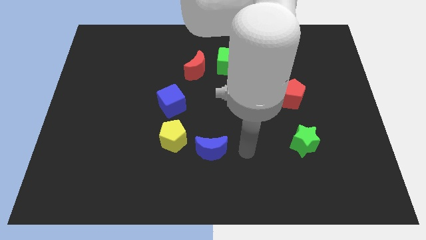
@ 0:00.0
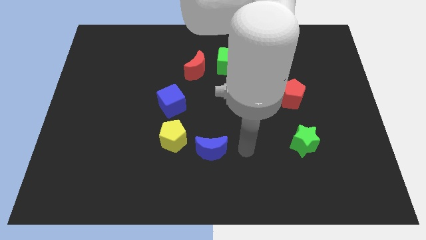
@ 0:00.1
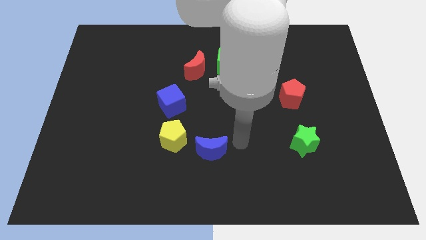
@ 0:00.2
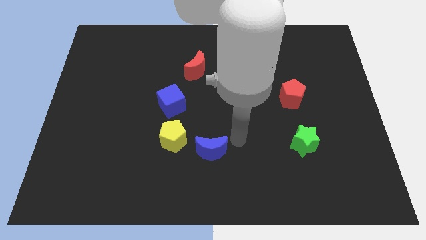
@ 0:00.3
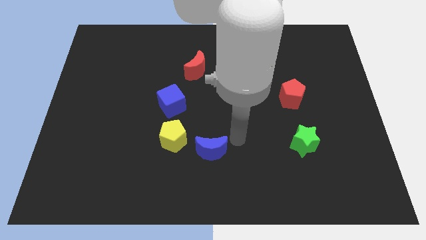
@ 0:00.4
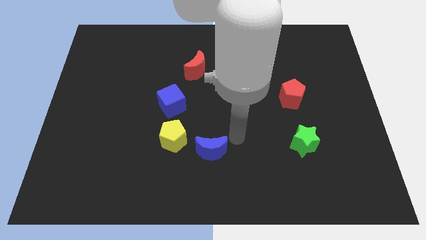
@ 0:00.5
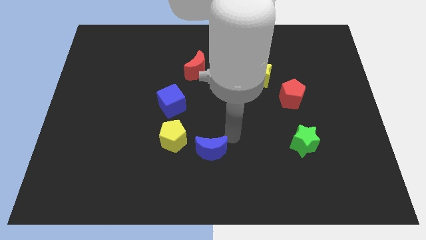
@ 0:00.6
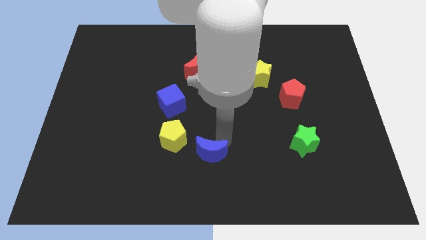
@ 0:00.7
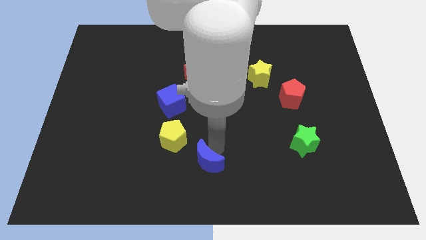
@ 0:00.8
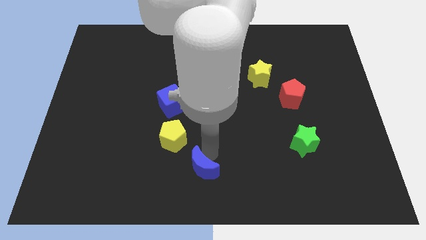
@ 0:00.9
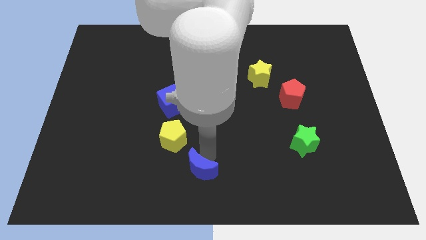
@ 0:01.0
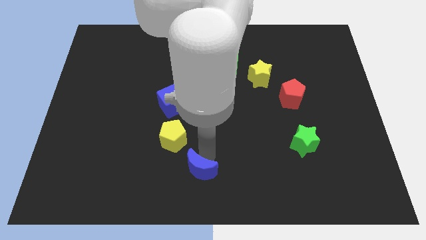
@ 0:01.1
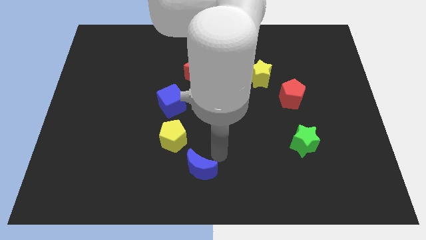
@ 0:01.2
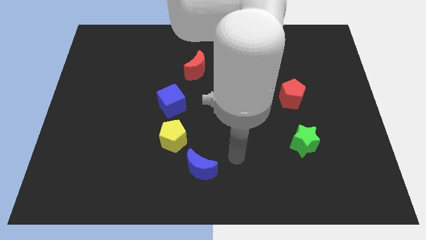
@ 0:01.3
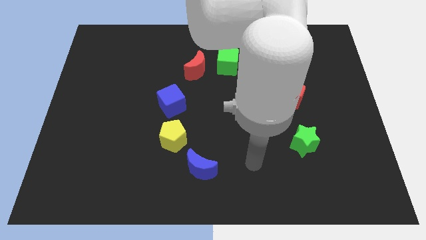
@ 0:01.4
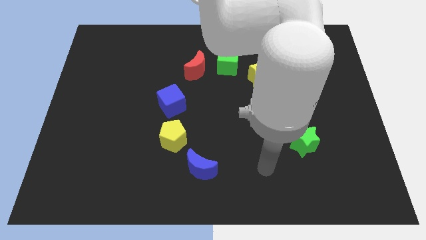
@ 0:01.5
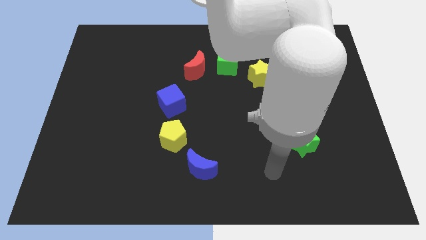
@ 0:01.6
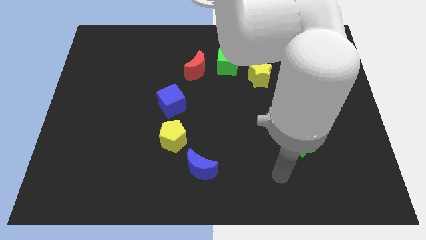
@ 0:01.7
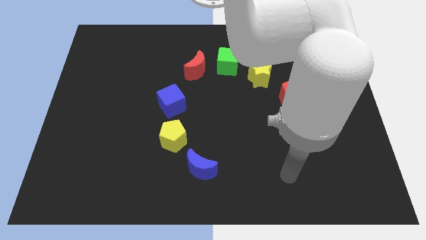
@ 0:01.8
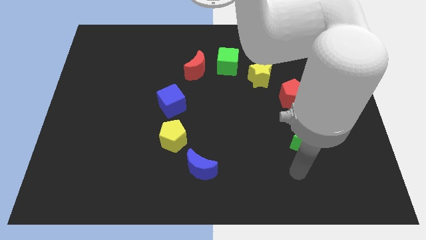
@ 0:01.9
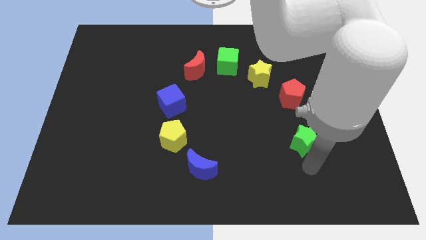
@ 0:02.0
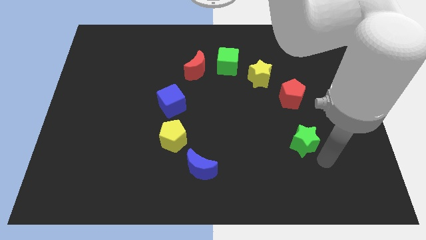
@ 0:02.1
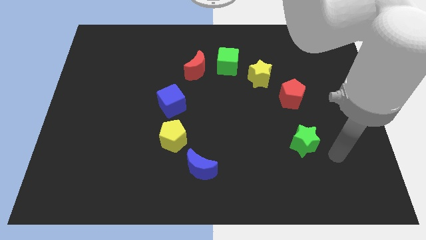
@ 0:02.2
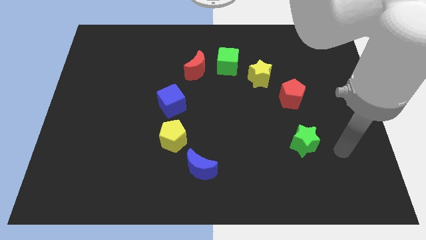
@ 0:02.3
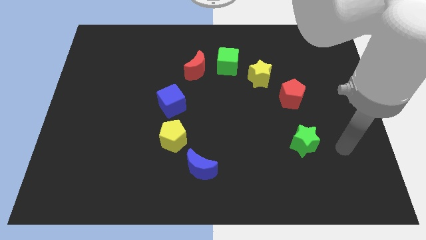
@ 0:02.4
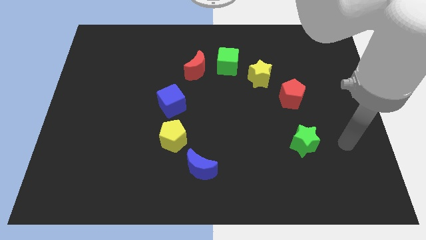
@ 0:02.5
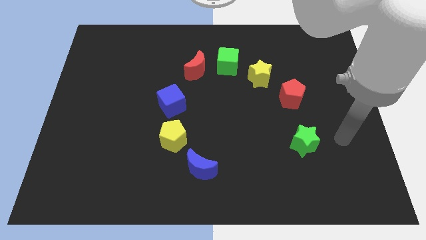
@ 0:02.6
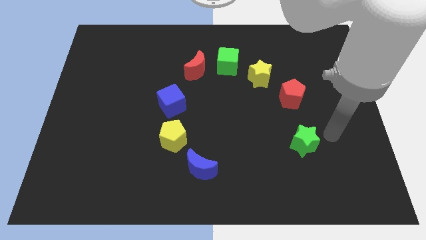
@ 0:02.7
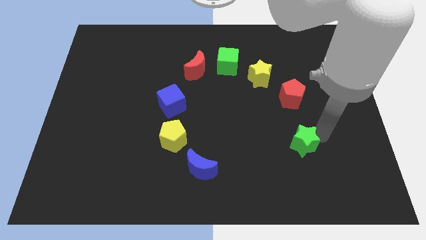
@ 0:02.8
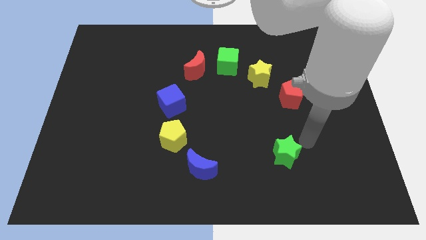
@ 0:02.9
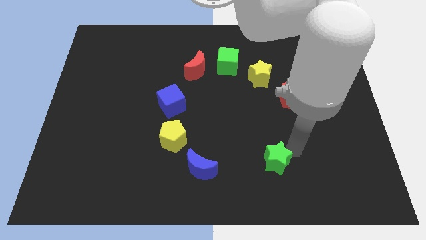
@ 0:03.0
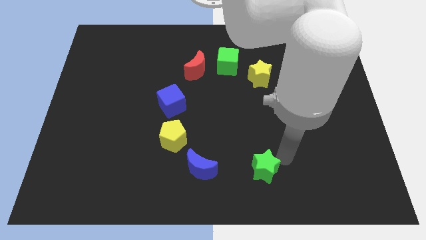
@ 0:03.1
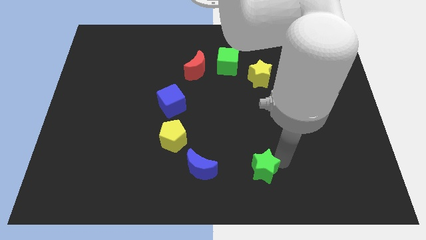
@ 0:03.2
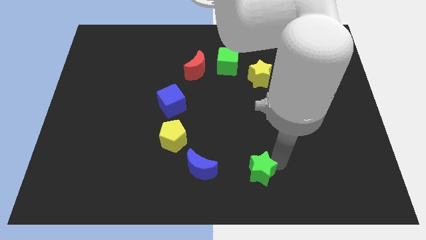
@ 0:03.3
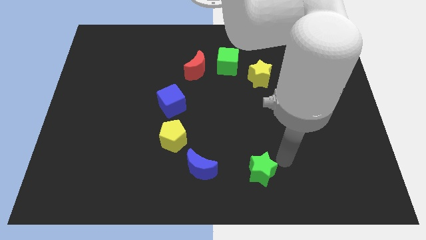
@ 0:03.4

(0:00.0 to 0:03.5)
drag green star below yellow star

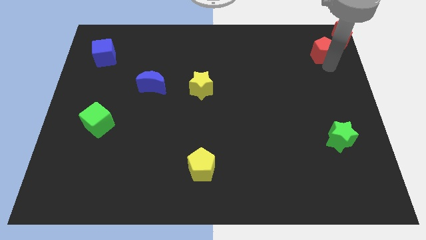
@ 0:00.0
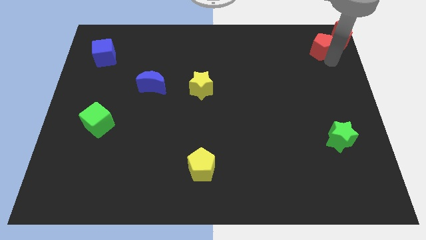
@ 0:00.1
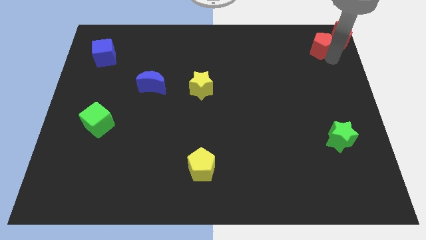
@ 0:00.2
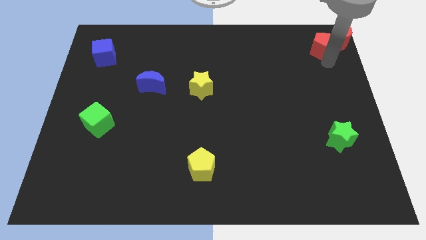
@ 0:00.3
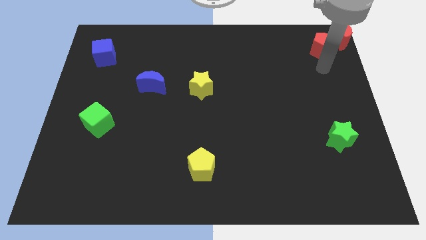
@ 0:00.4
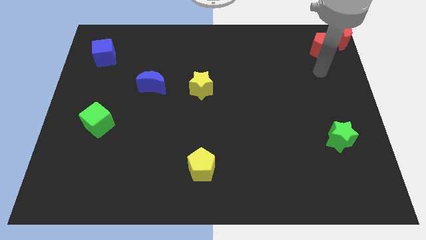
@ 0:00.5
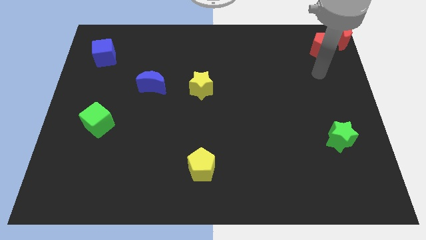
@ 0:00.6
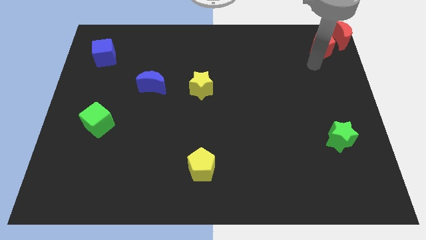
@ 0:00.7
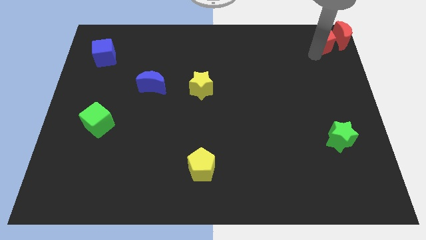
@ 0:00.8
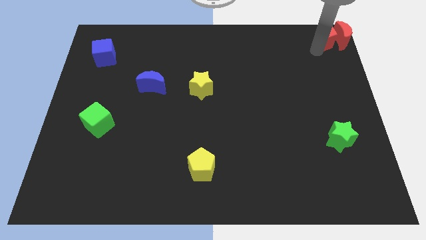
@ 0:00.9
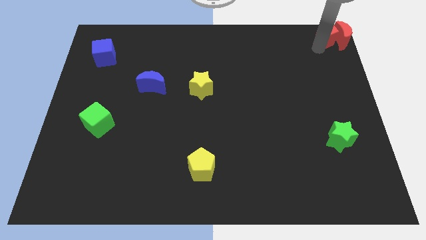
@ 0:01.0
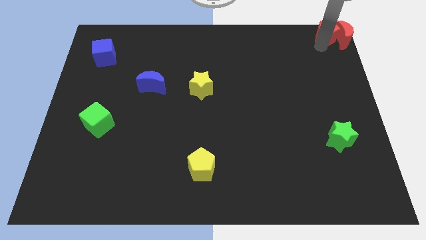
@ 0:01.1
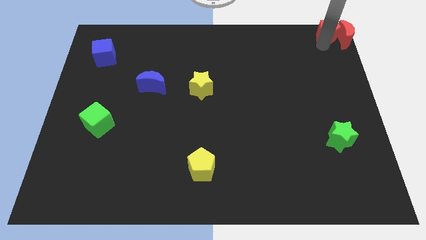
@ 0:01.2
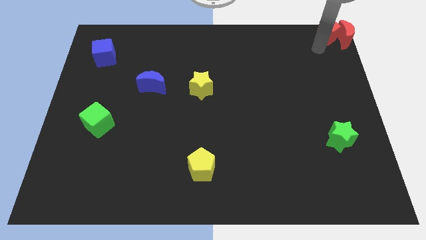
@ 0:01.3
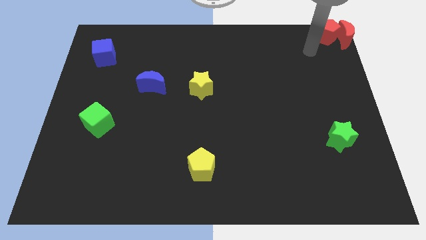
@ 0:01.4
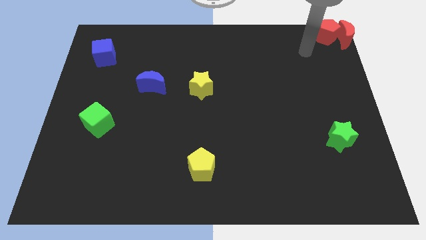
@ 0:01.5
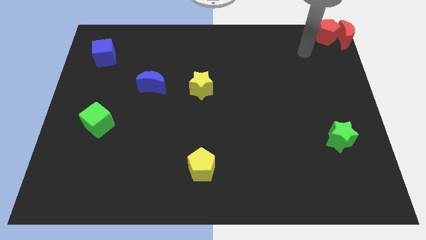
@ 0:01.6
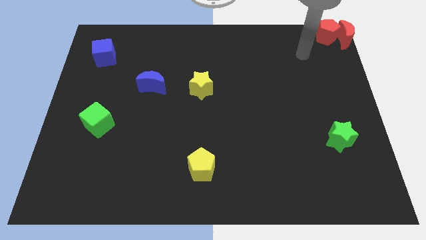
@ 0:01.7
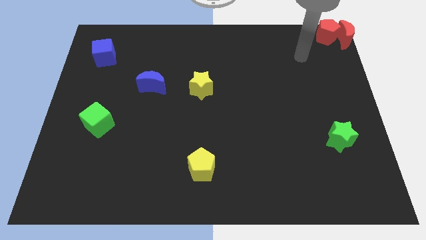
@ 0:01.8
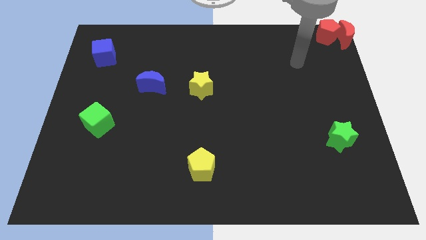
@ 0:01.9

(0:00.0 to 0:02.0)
move red pentagon close to red moon

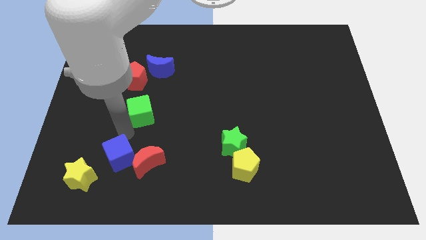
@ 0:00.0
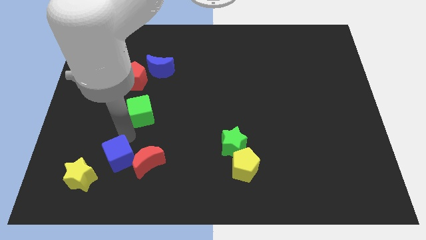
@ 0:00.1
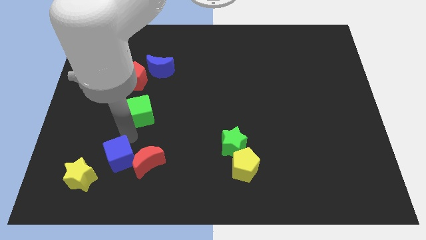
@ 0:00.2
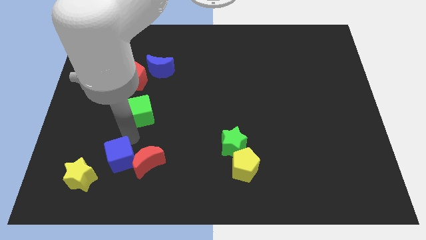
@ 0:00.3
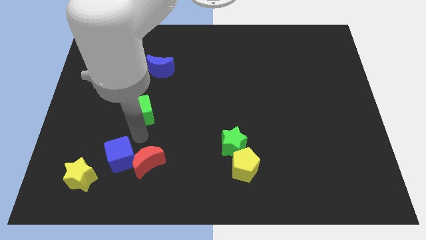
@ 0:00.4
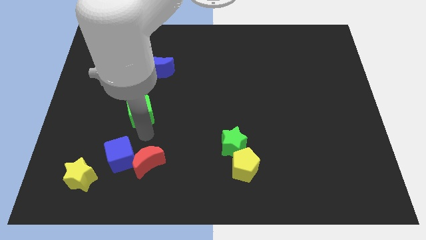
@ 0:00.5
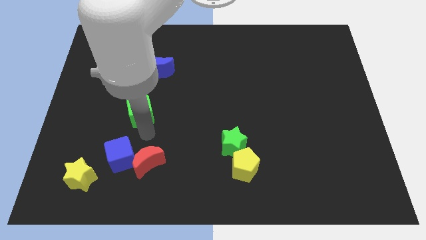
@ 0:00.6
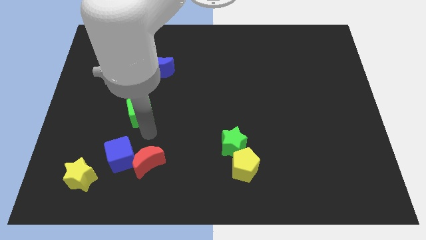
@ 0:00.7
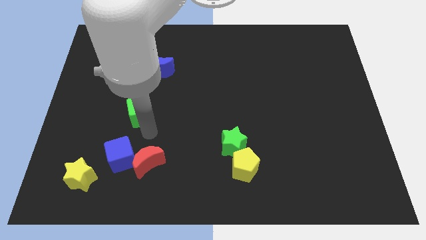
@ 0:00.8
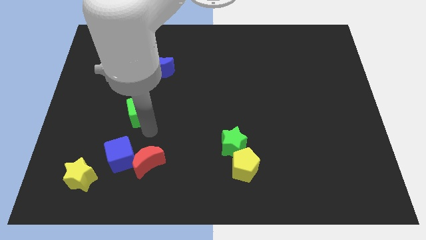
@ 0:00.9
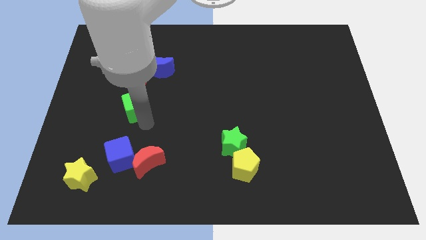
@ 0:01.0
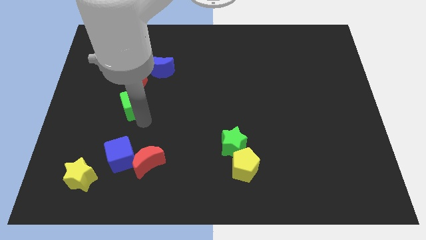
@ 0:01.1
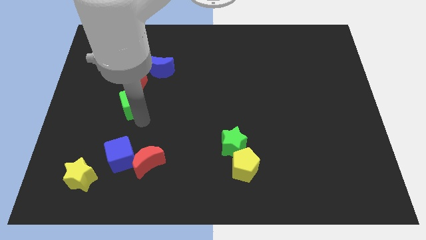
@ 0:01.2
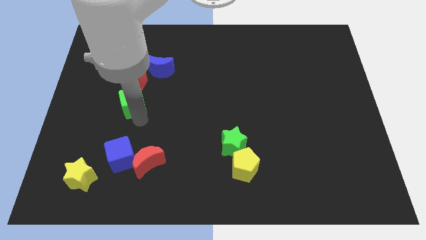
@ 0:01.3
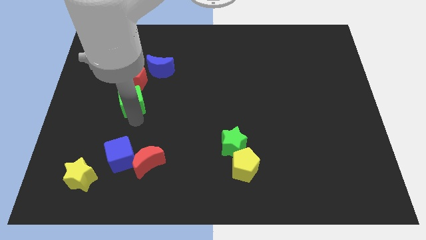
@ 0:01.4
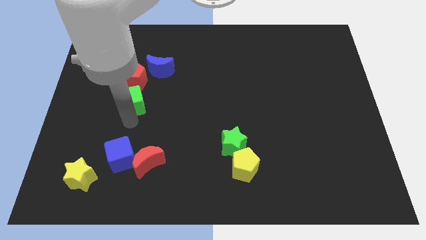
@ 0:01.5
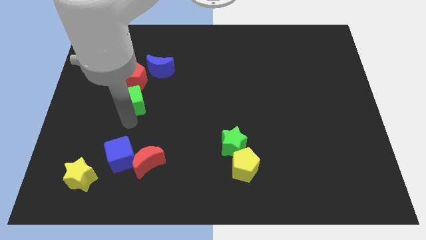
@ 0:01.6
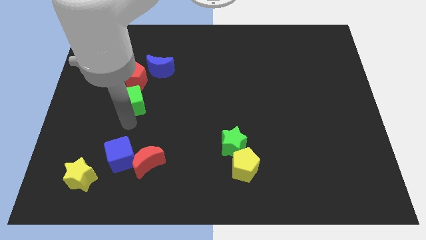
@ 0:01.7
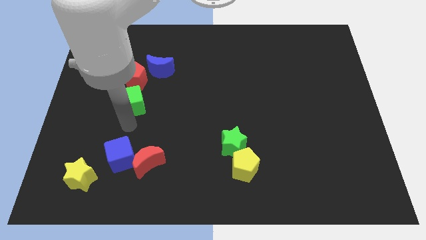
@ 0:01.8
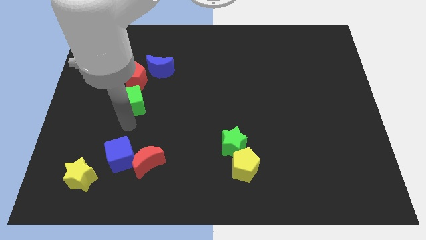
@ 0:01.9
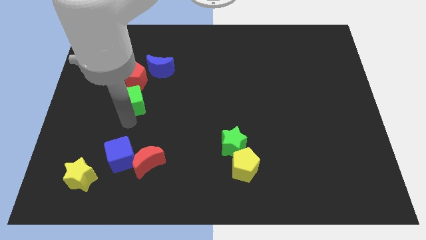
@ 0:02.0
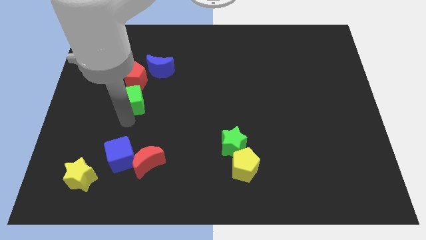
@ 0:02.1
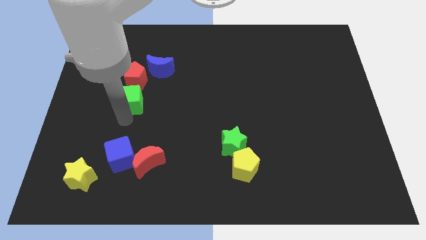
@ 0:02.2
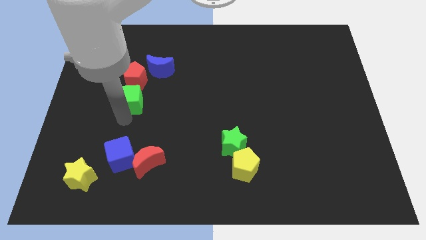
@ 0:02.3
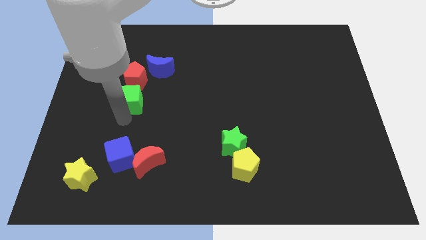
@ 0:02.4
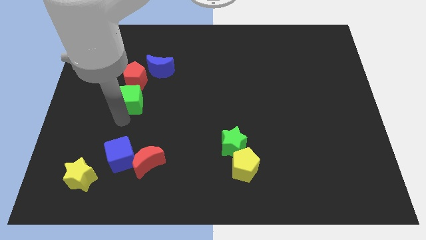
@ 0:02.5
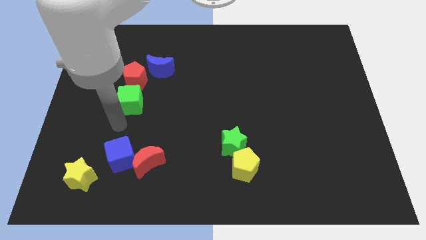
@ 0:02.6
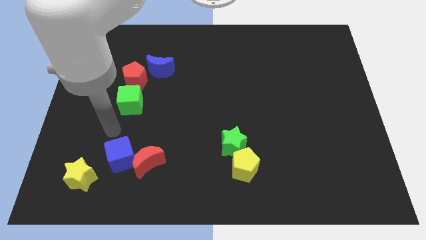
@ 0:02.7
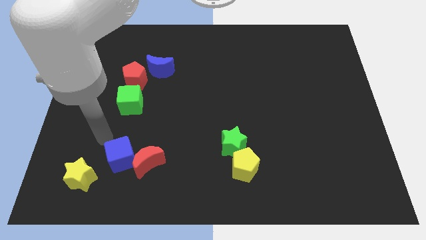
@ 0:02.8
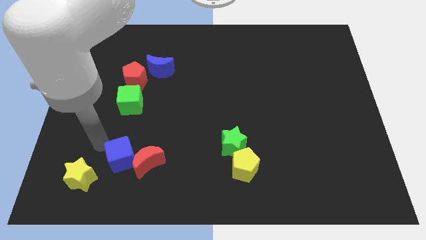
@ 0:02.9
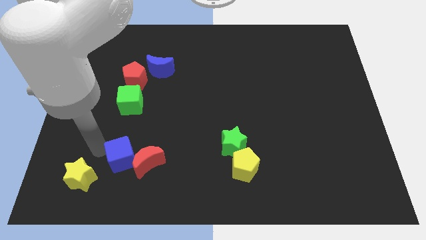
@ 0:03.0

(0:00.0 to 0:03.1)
place the green cube below the red pentagon

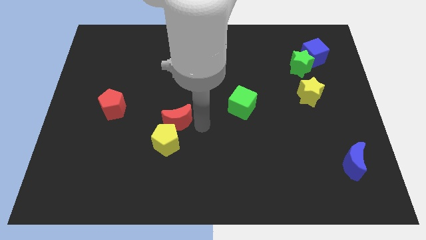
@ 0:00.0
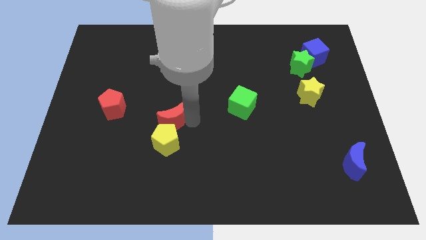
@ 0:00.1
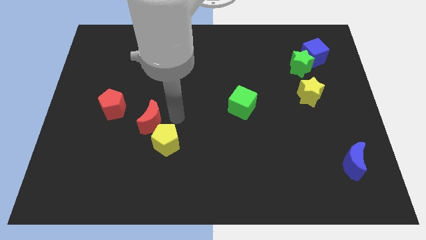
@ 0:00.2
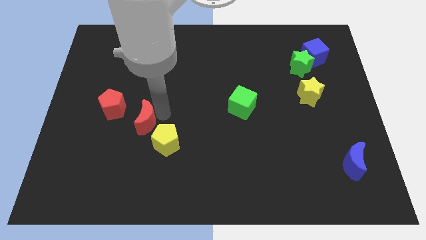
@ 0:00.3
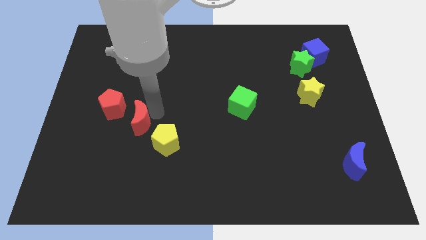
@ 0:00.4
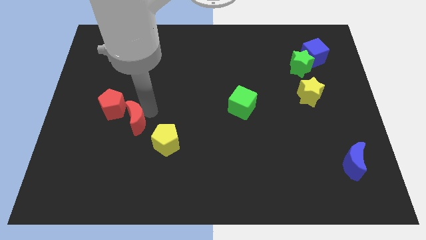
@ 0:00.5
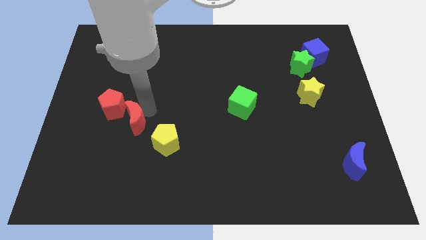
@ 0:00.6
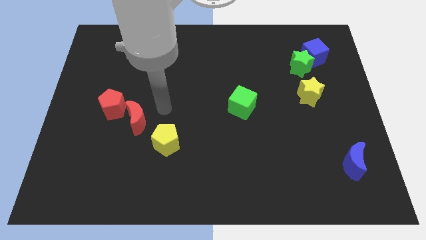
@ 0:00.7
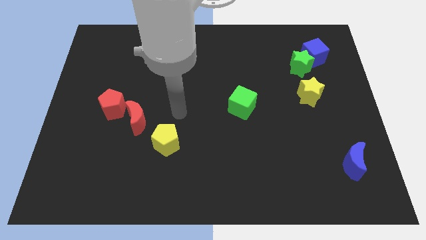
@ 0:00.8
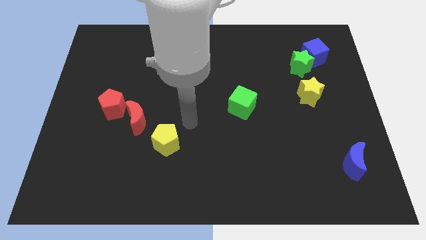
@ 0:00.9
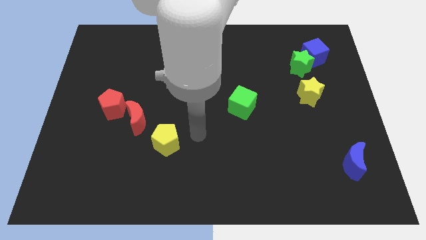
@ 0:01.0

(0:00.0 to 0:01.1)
push the red moon to the top left of the yellow pentagon
